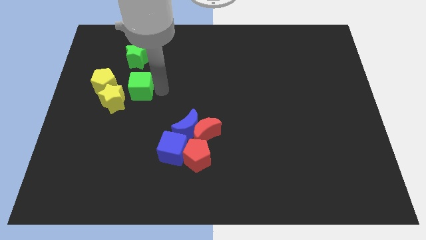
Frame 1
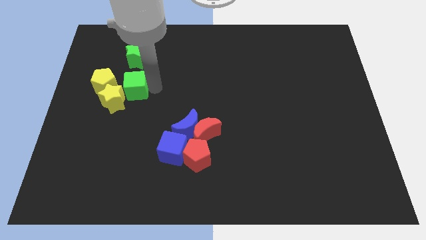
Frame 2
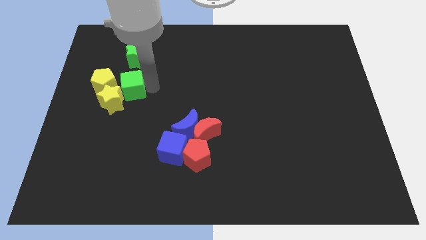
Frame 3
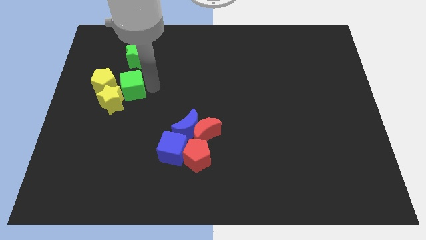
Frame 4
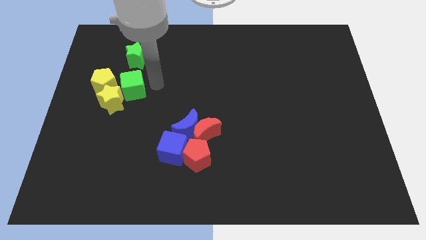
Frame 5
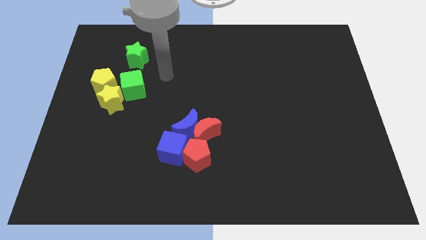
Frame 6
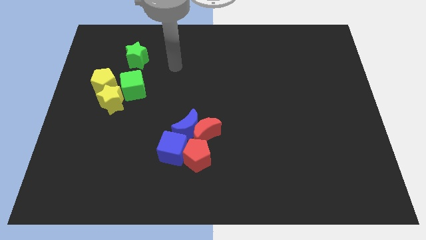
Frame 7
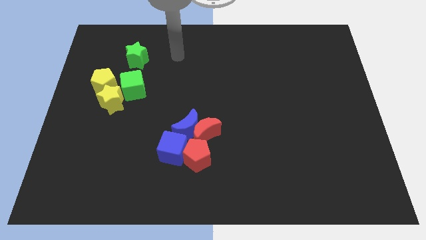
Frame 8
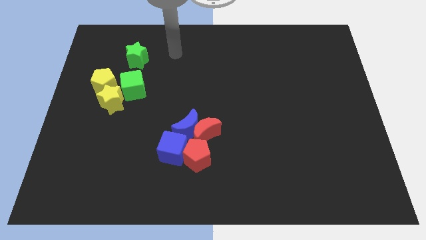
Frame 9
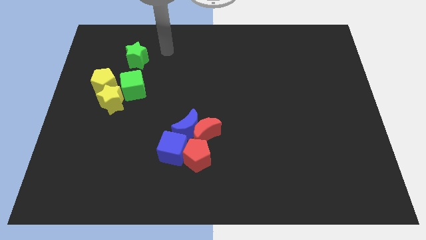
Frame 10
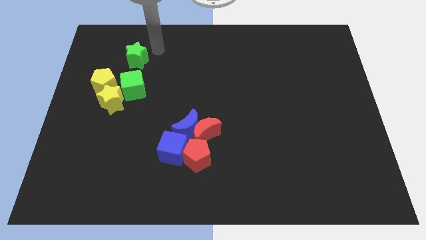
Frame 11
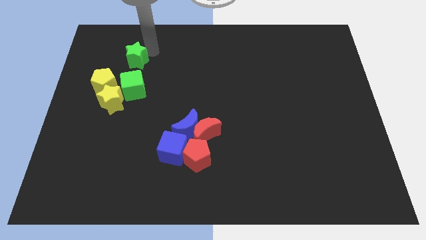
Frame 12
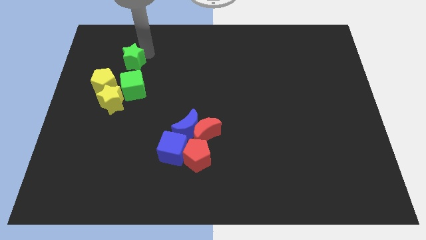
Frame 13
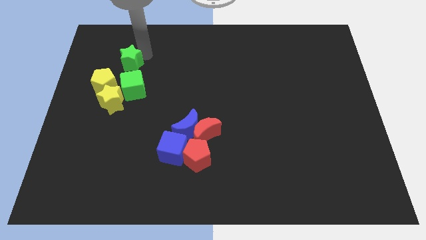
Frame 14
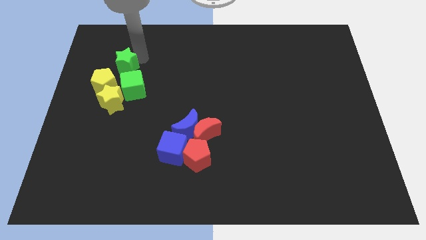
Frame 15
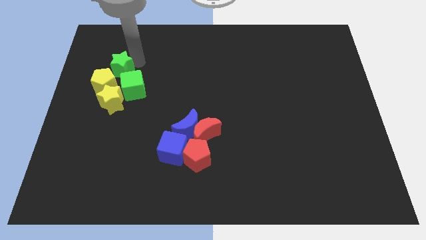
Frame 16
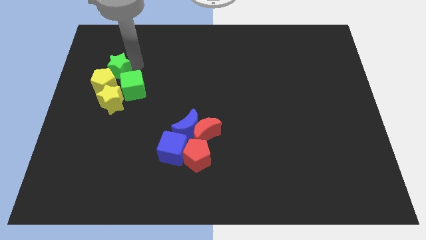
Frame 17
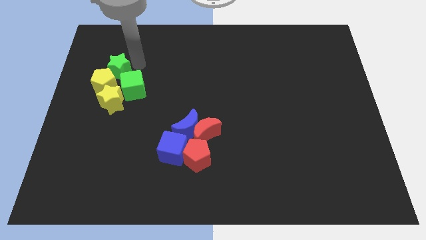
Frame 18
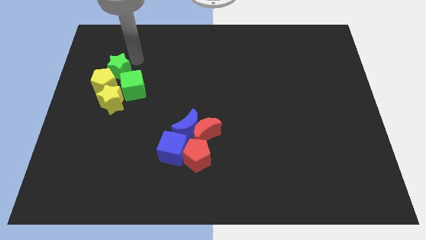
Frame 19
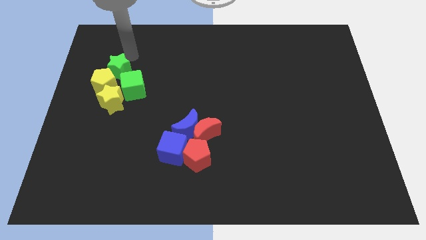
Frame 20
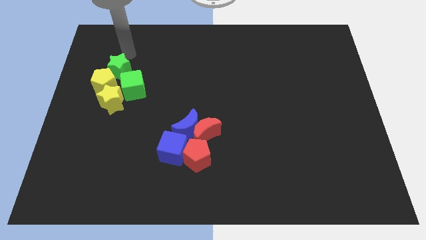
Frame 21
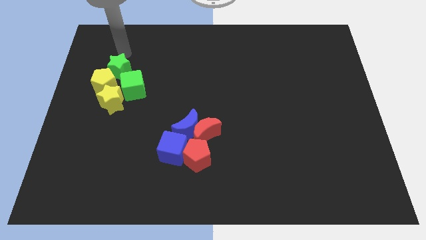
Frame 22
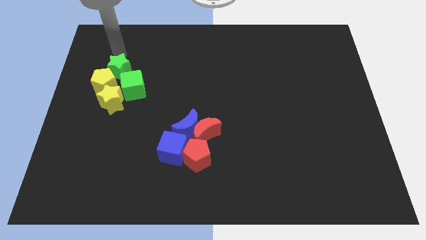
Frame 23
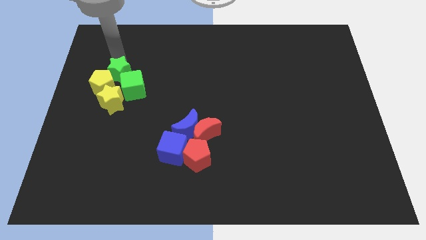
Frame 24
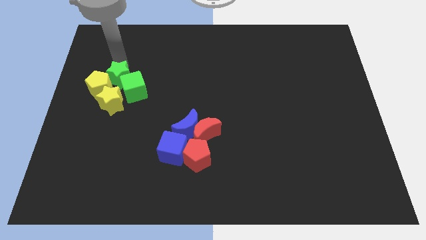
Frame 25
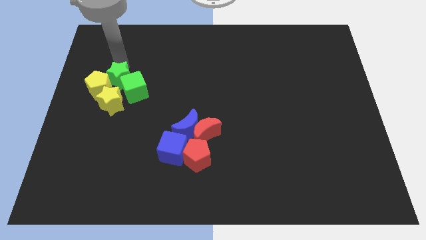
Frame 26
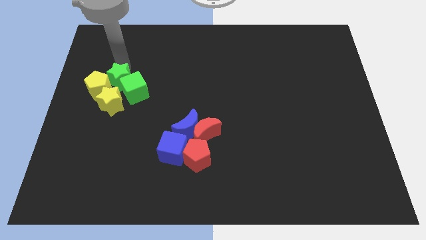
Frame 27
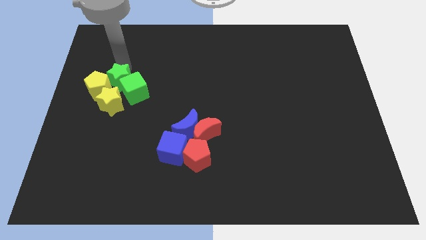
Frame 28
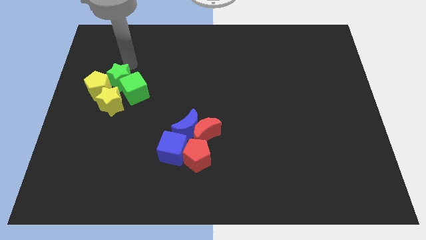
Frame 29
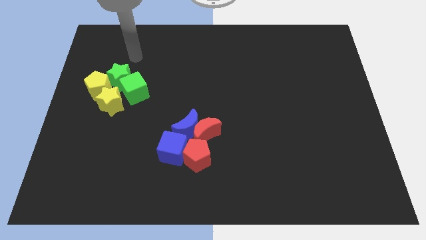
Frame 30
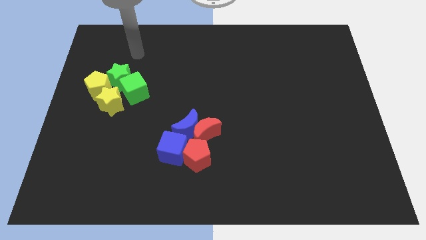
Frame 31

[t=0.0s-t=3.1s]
push green star slightly below

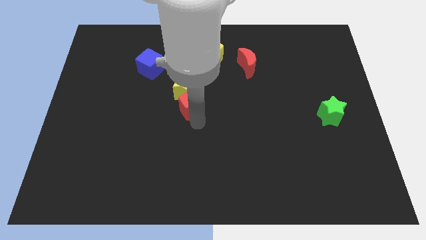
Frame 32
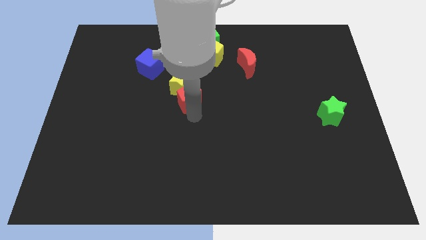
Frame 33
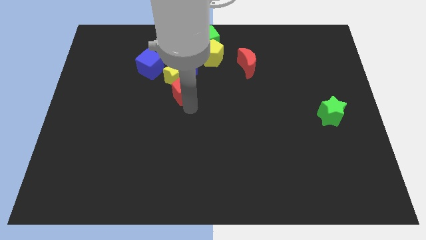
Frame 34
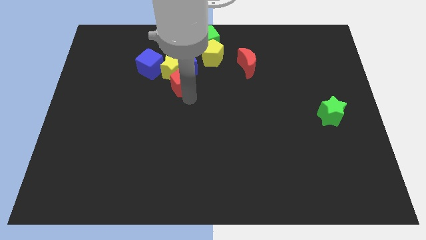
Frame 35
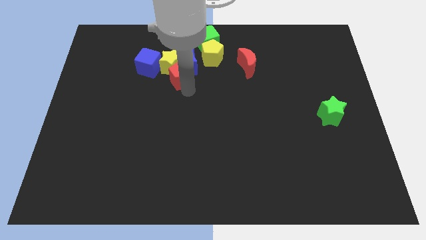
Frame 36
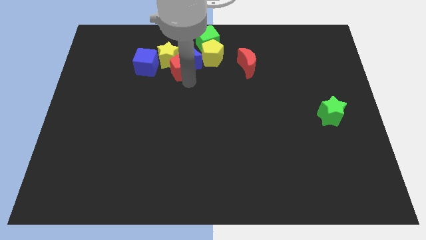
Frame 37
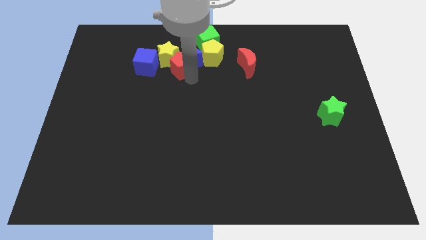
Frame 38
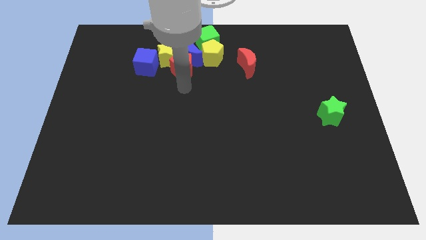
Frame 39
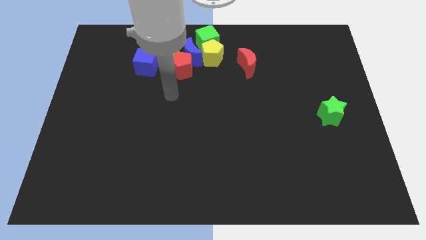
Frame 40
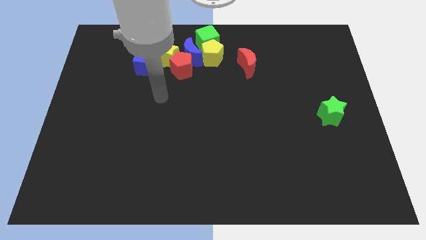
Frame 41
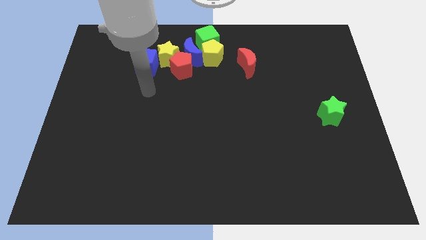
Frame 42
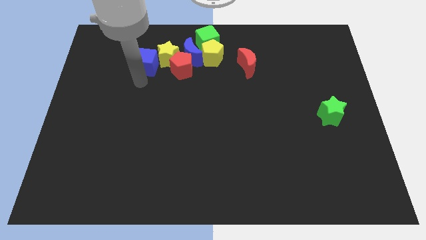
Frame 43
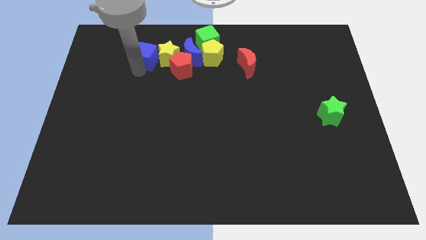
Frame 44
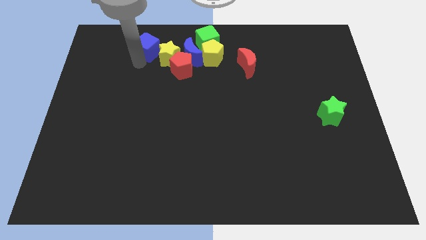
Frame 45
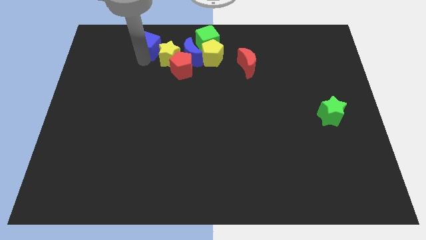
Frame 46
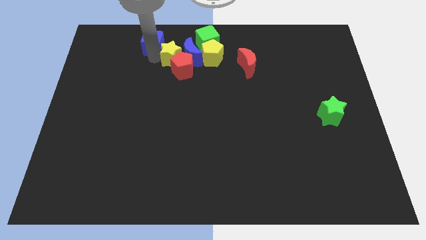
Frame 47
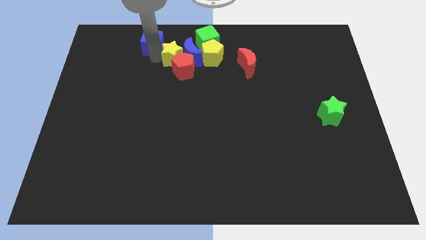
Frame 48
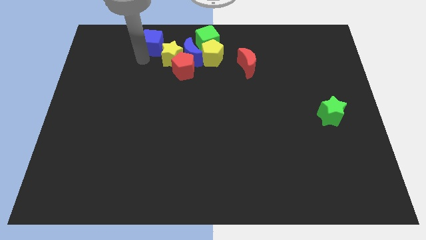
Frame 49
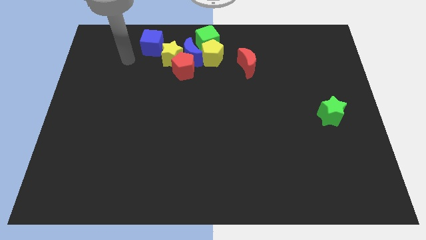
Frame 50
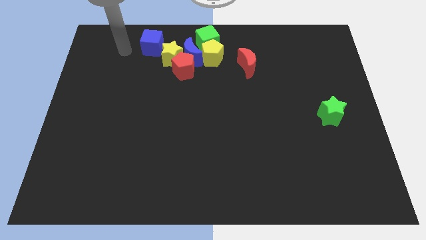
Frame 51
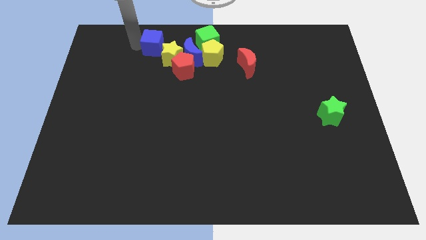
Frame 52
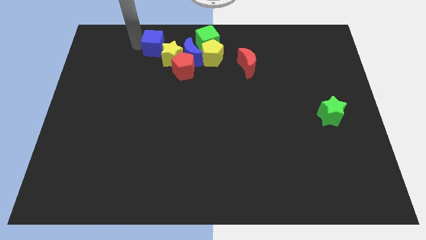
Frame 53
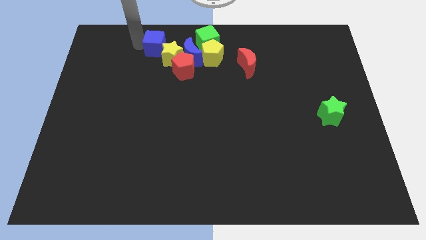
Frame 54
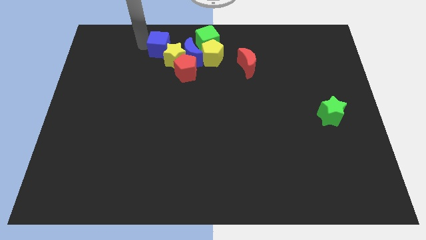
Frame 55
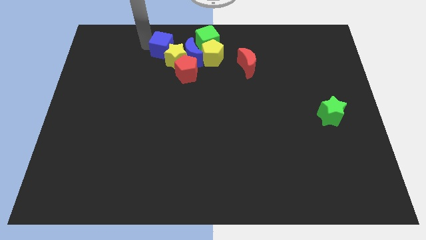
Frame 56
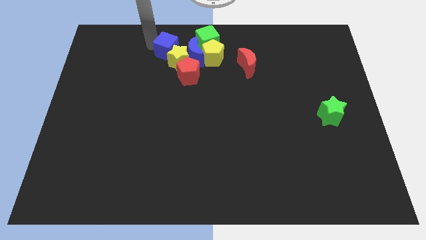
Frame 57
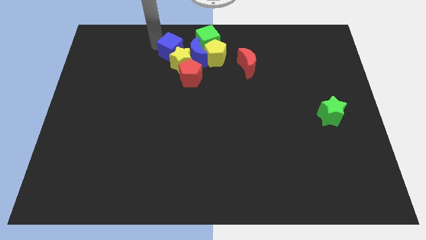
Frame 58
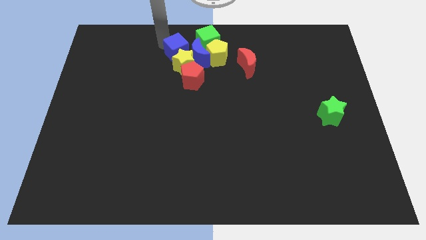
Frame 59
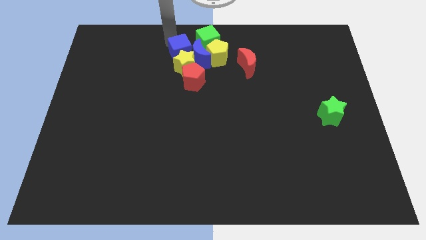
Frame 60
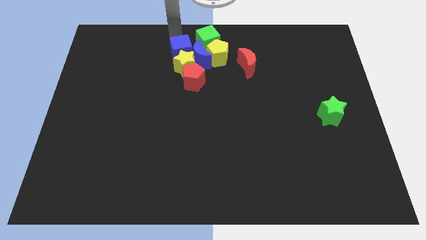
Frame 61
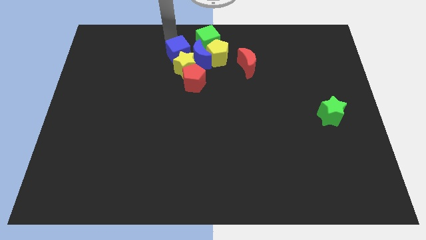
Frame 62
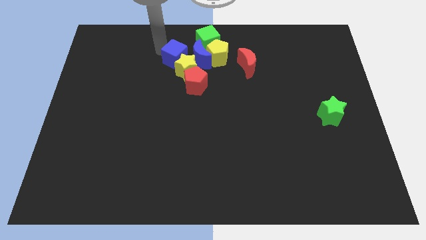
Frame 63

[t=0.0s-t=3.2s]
move group of blocks towards centre

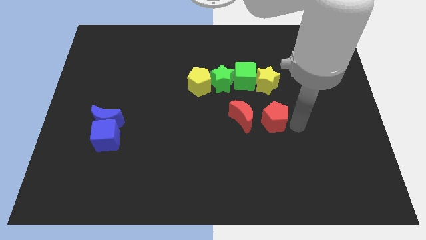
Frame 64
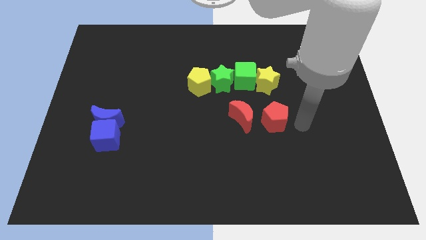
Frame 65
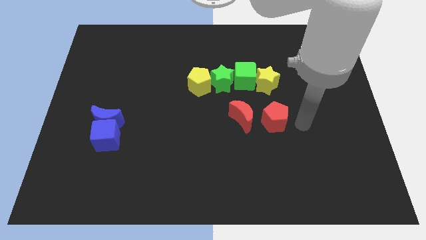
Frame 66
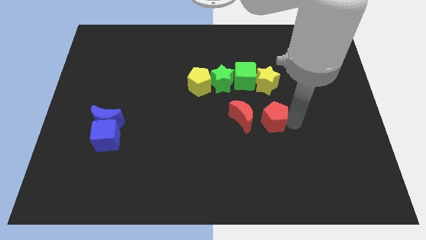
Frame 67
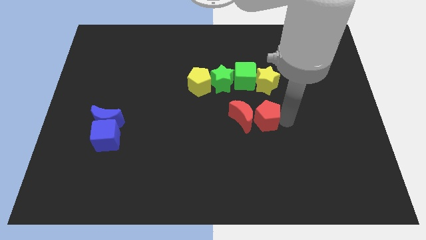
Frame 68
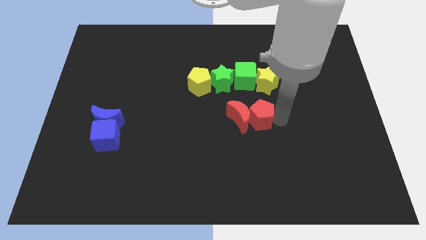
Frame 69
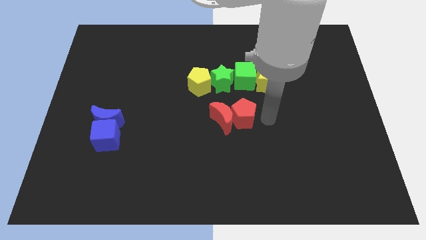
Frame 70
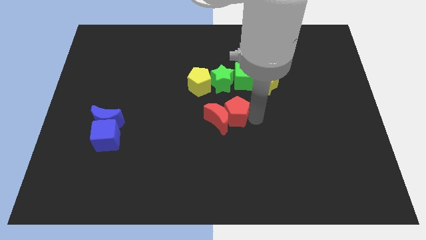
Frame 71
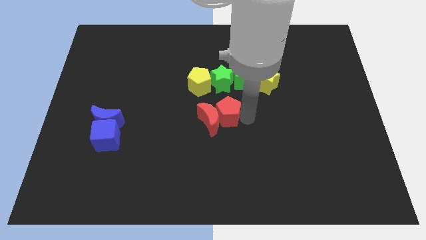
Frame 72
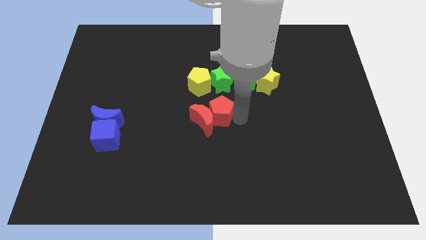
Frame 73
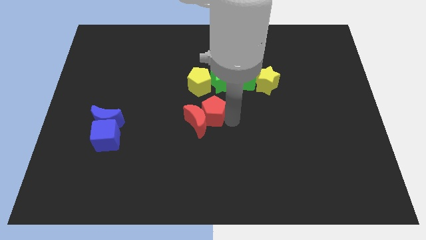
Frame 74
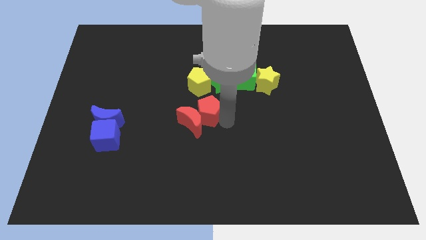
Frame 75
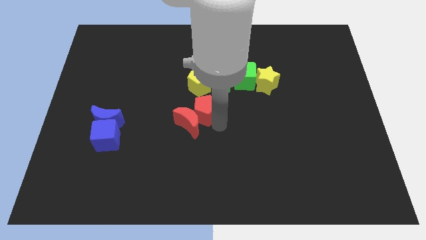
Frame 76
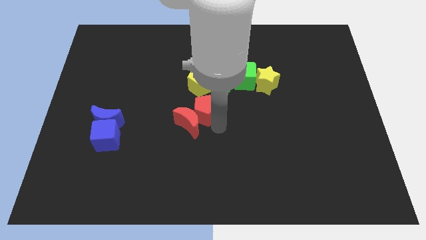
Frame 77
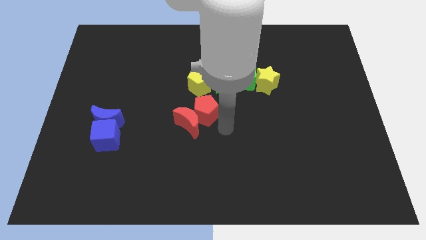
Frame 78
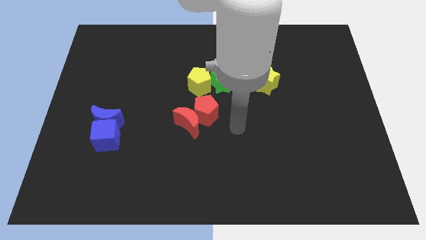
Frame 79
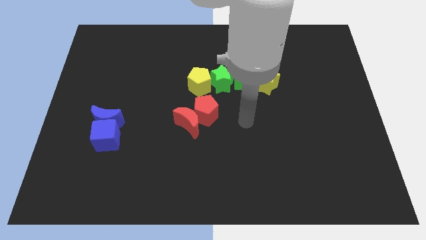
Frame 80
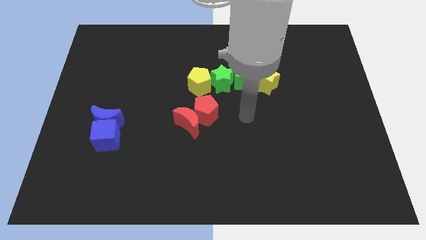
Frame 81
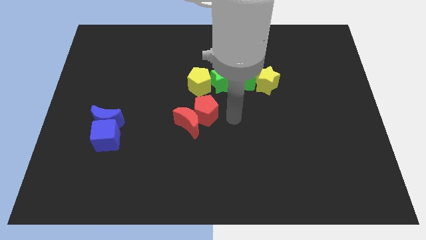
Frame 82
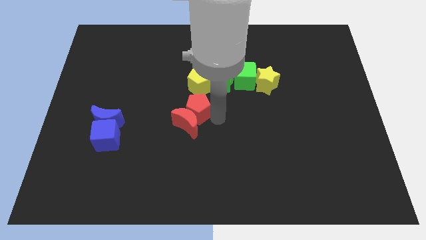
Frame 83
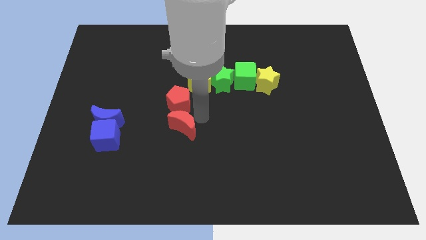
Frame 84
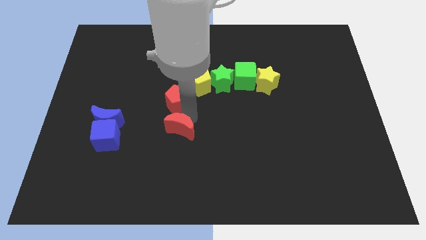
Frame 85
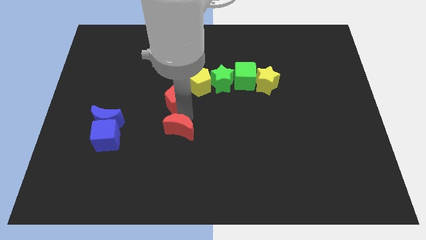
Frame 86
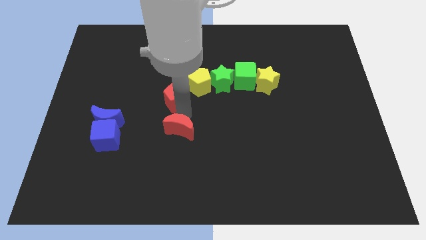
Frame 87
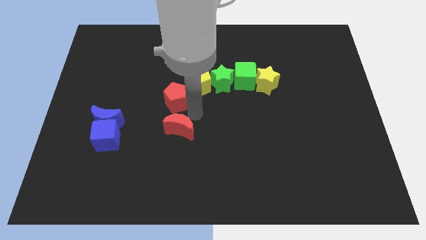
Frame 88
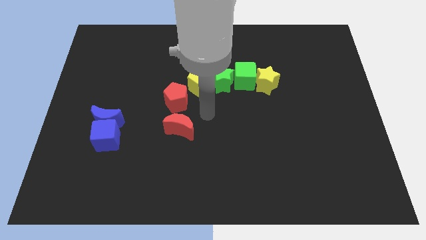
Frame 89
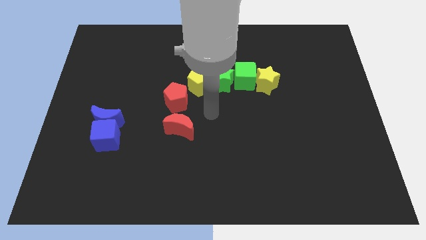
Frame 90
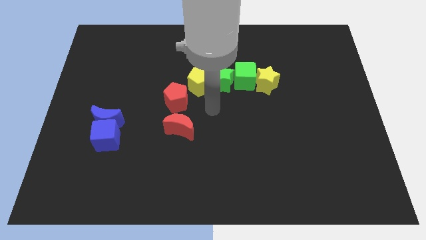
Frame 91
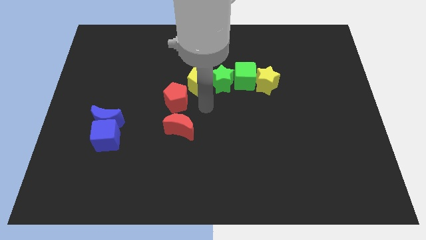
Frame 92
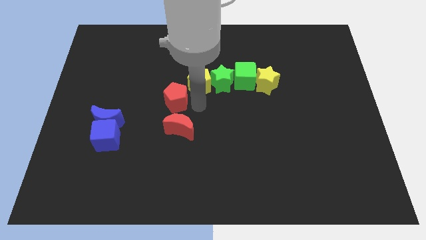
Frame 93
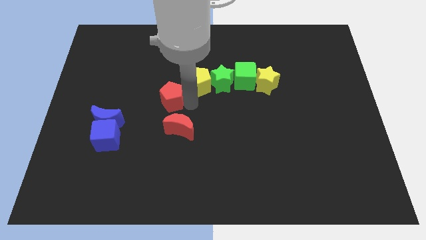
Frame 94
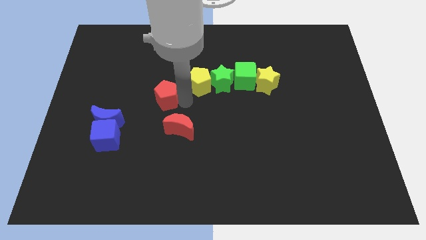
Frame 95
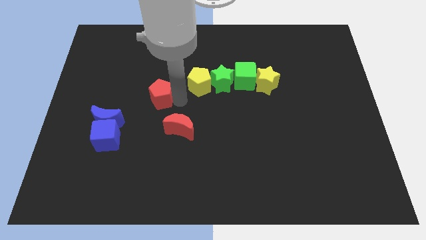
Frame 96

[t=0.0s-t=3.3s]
place the red pentagon to the left of the yellow pentagon
